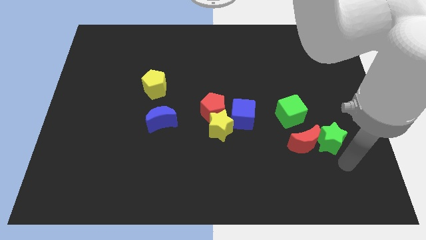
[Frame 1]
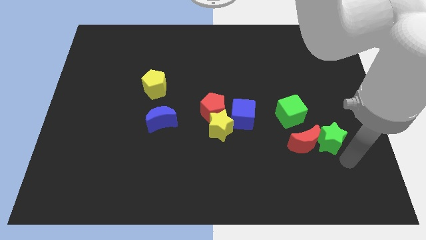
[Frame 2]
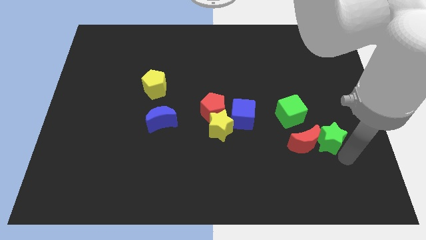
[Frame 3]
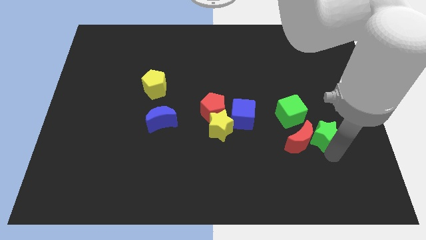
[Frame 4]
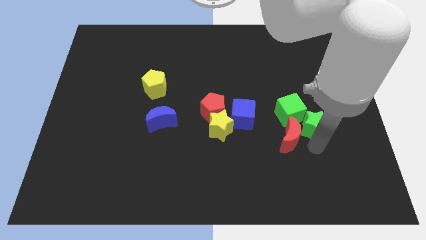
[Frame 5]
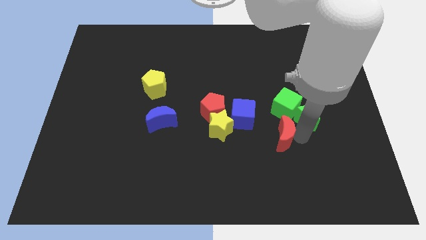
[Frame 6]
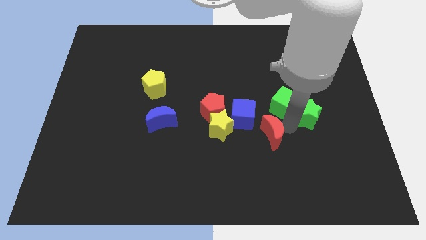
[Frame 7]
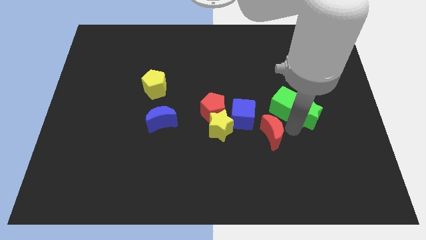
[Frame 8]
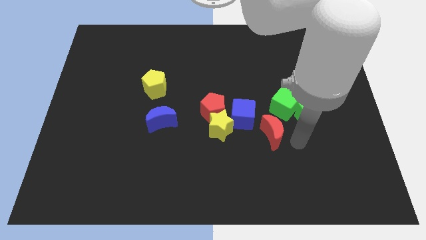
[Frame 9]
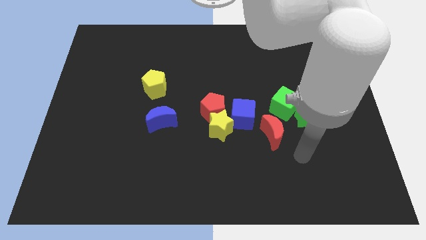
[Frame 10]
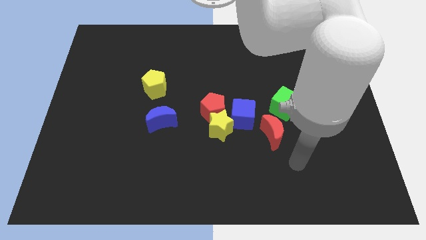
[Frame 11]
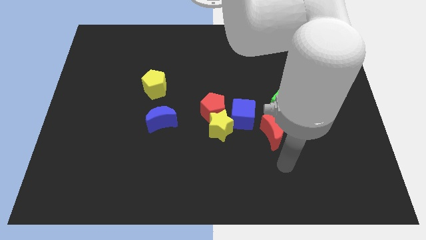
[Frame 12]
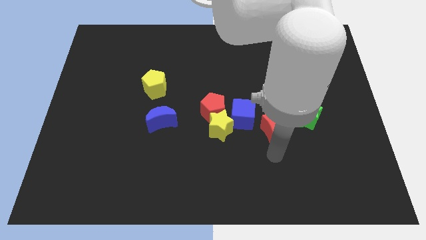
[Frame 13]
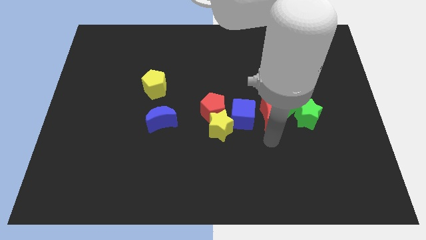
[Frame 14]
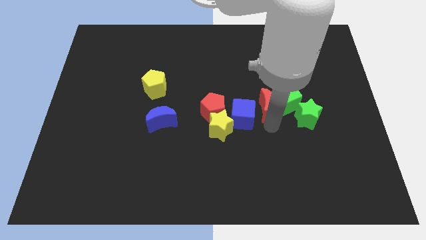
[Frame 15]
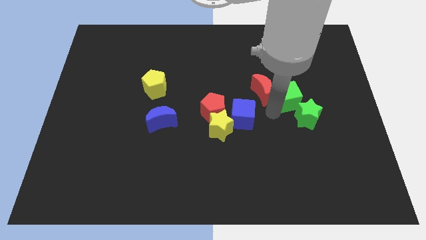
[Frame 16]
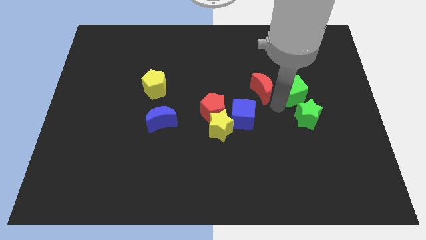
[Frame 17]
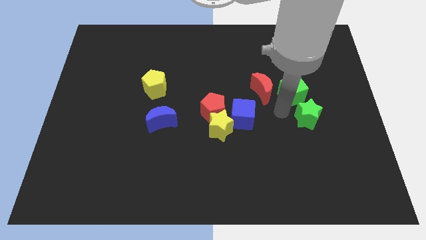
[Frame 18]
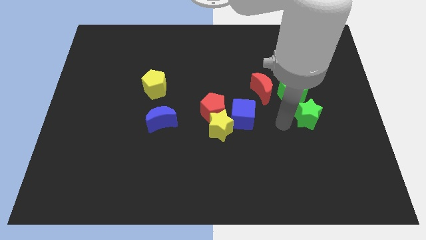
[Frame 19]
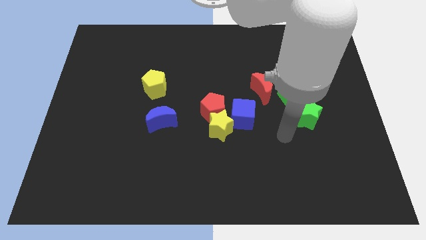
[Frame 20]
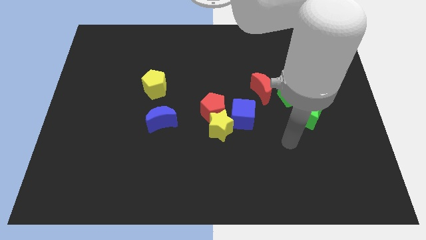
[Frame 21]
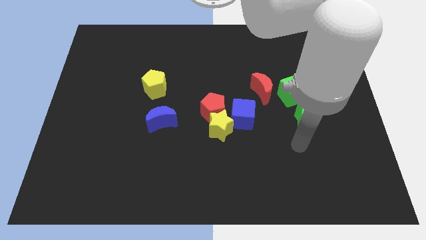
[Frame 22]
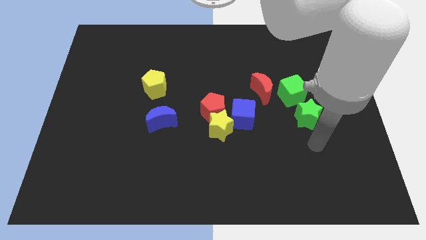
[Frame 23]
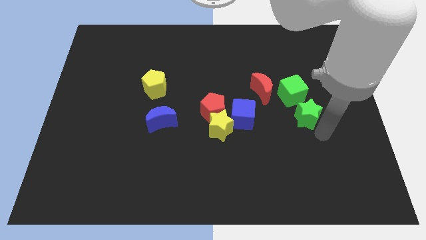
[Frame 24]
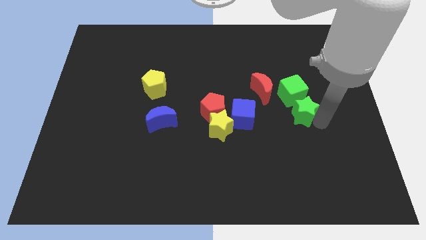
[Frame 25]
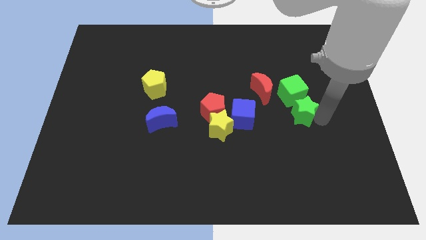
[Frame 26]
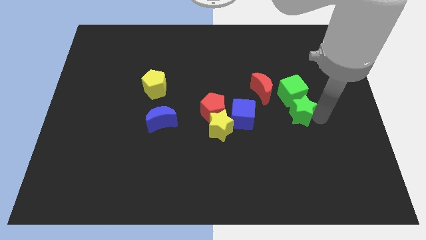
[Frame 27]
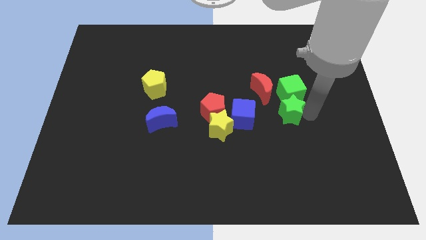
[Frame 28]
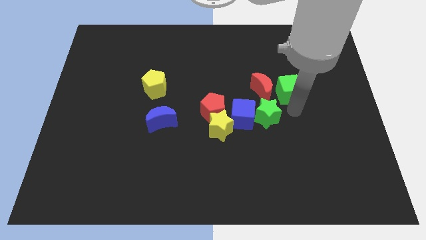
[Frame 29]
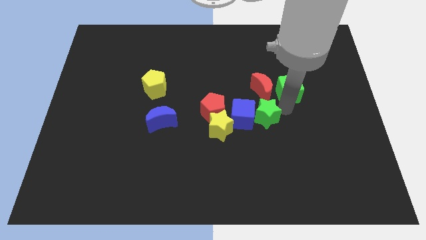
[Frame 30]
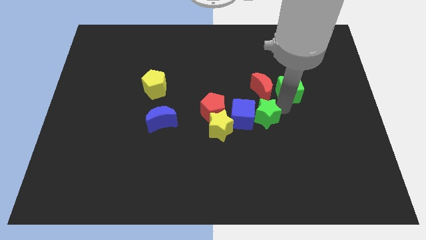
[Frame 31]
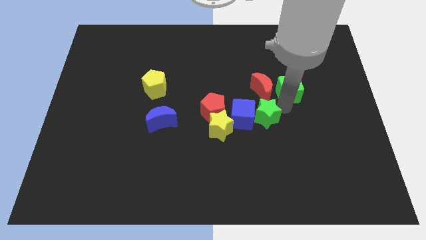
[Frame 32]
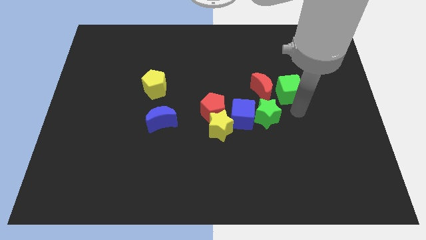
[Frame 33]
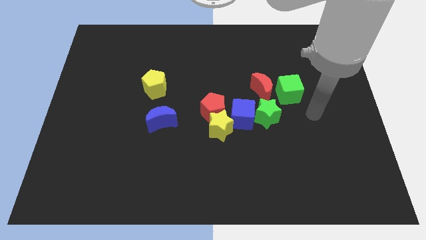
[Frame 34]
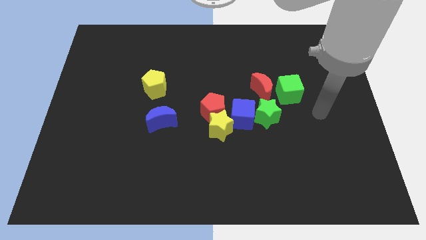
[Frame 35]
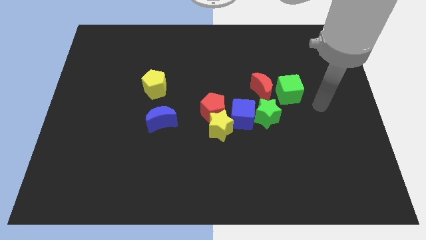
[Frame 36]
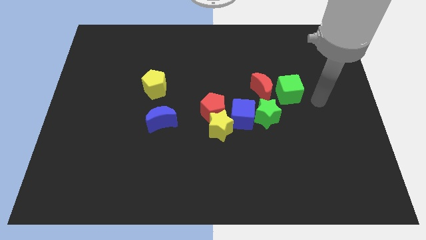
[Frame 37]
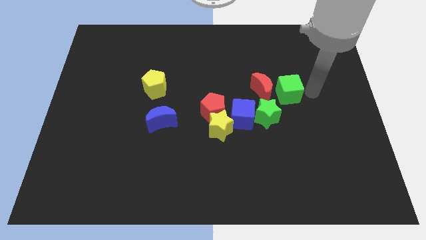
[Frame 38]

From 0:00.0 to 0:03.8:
push the green blocks and the red moon towards the center

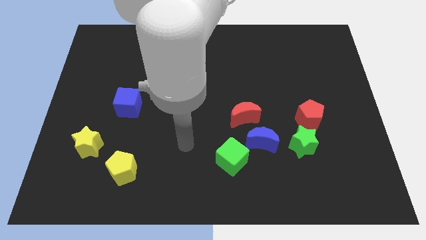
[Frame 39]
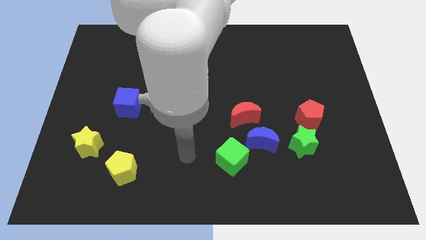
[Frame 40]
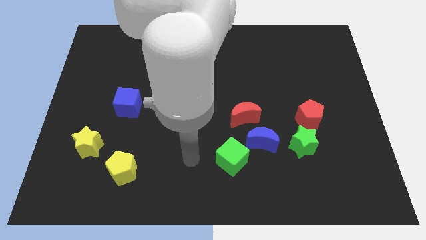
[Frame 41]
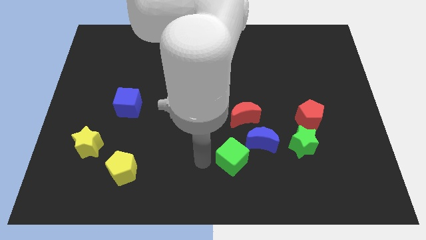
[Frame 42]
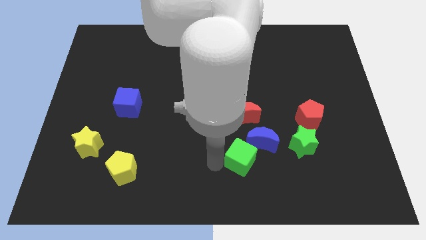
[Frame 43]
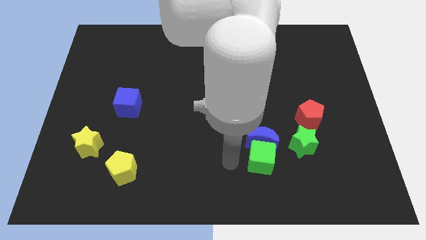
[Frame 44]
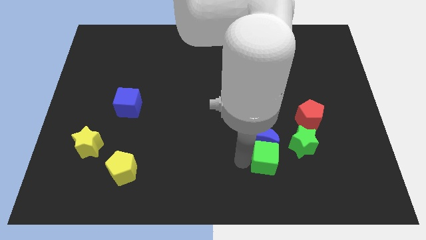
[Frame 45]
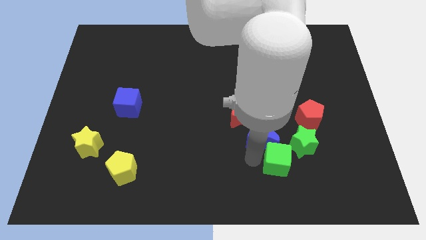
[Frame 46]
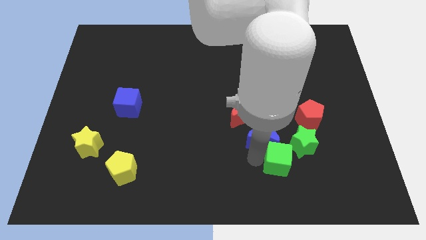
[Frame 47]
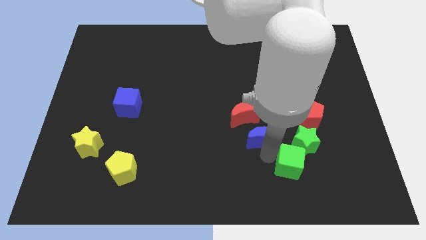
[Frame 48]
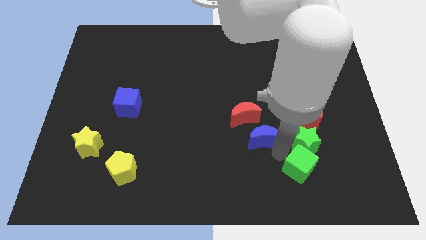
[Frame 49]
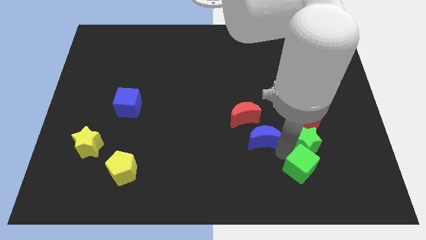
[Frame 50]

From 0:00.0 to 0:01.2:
push the green cube into the green star

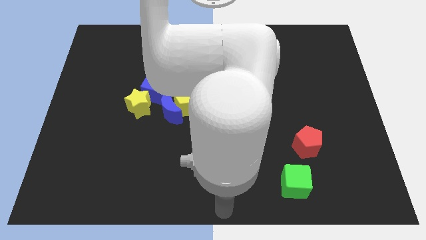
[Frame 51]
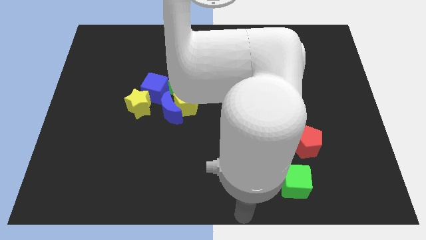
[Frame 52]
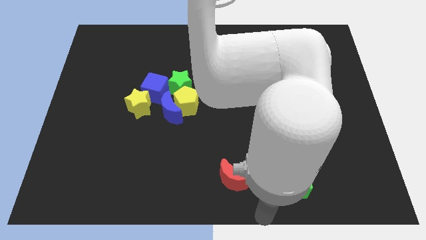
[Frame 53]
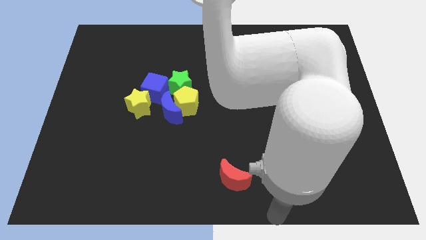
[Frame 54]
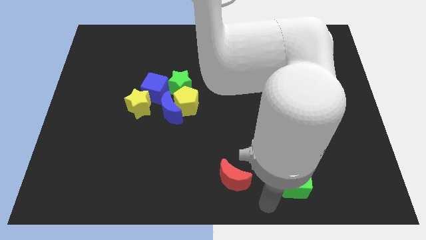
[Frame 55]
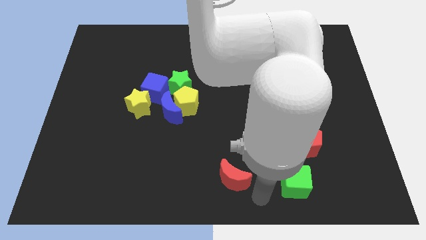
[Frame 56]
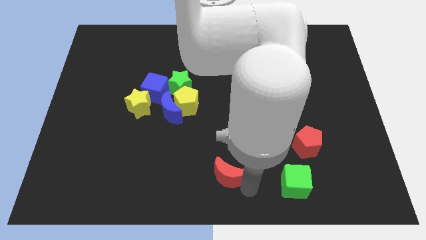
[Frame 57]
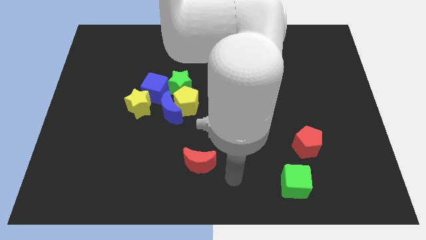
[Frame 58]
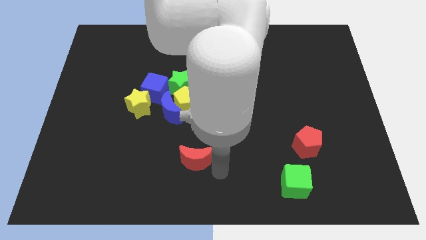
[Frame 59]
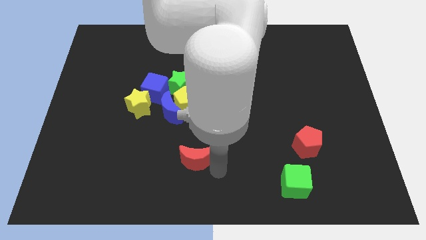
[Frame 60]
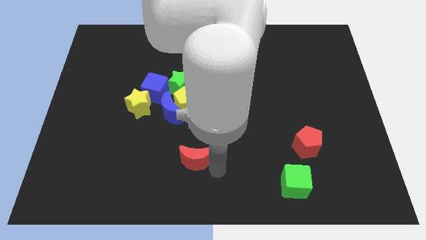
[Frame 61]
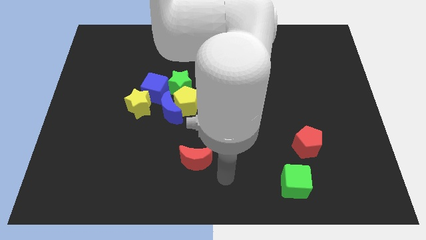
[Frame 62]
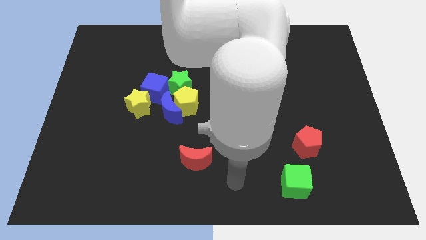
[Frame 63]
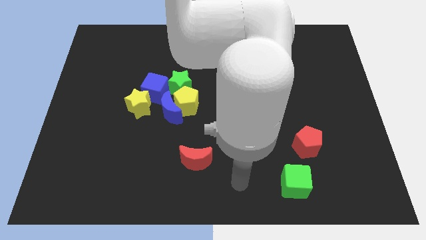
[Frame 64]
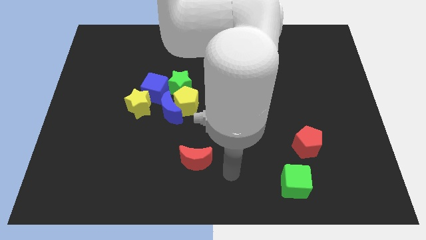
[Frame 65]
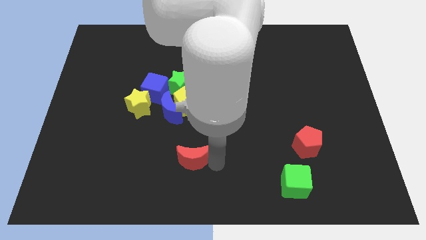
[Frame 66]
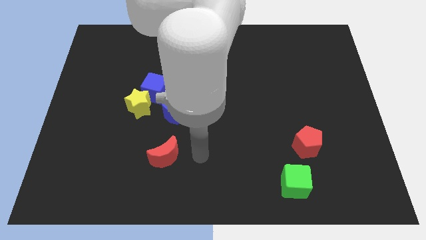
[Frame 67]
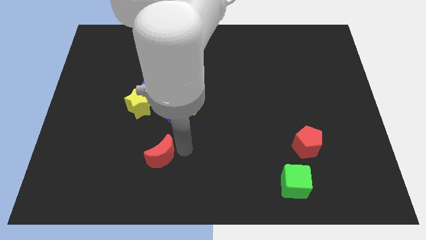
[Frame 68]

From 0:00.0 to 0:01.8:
place the red moon diagonally to the blue moon

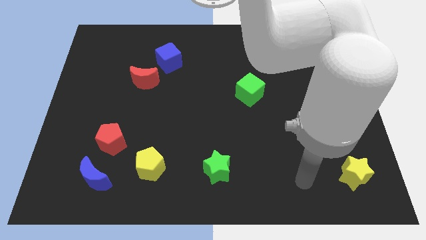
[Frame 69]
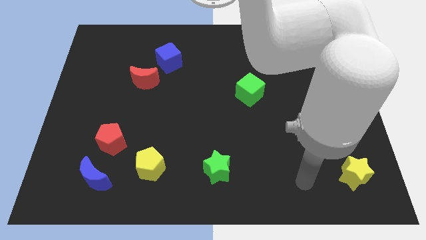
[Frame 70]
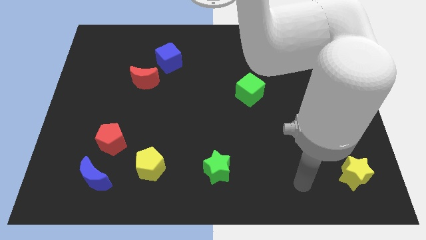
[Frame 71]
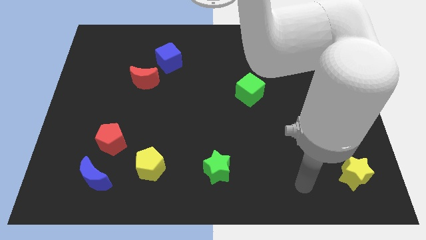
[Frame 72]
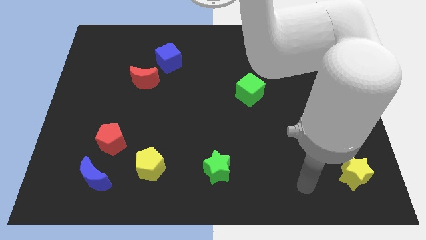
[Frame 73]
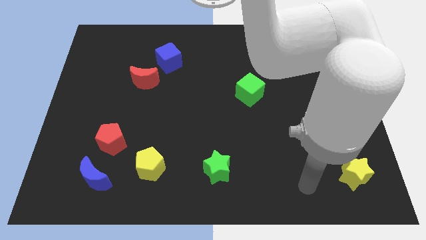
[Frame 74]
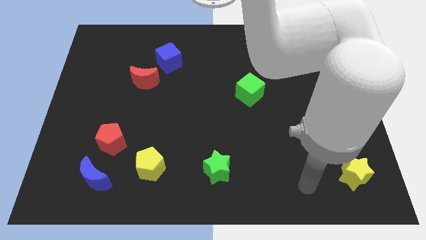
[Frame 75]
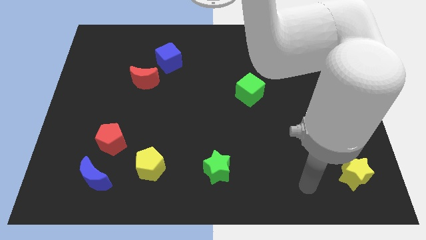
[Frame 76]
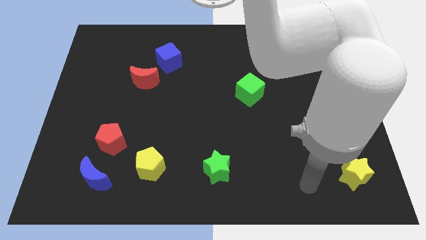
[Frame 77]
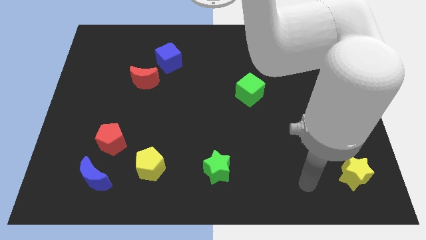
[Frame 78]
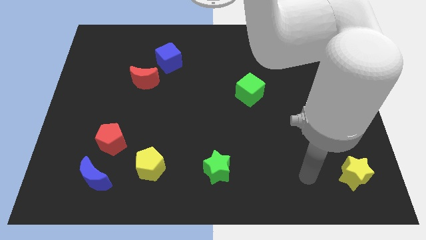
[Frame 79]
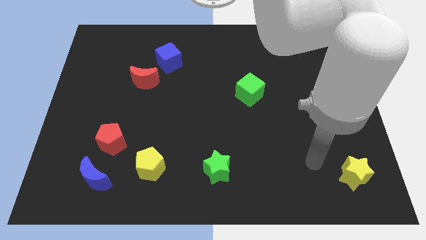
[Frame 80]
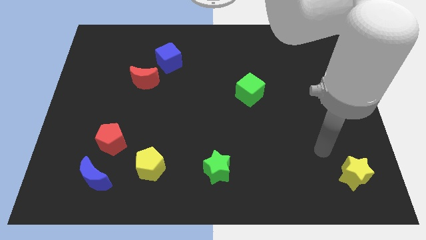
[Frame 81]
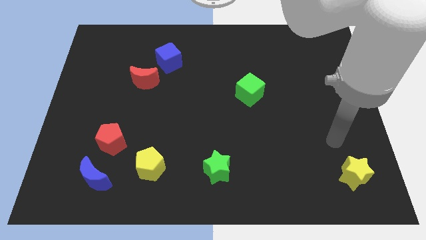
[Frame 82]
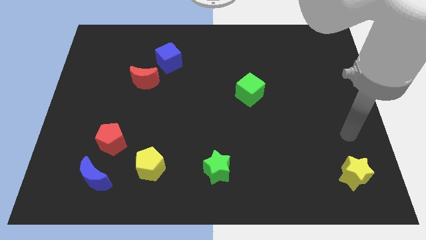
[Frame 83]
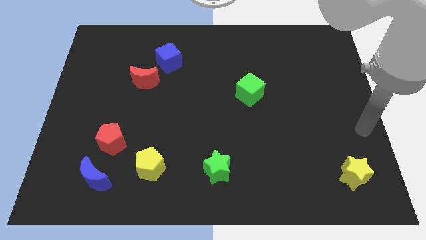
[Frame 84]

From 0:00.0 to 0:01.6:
point the arm above the yellow star

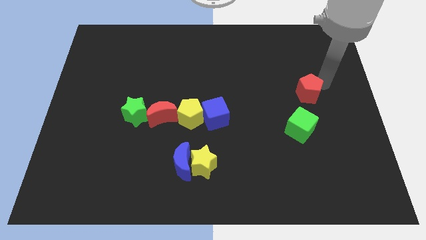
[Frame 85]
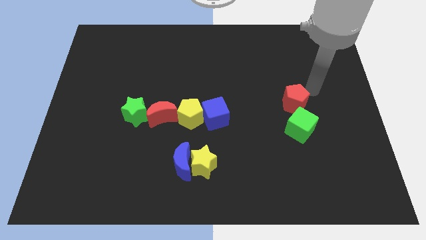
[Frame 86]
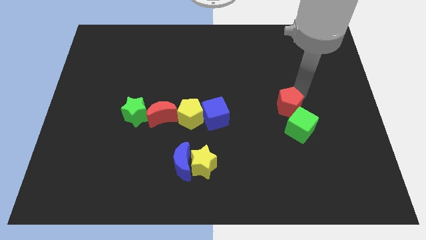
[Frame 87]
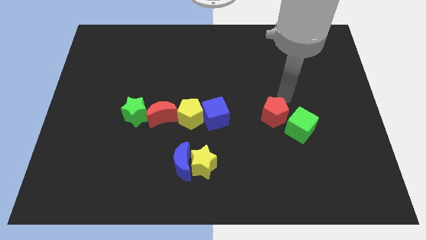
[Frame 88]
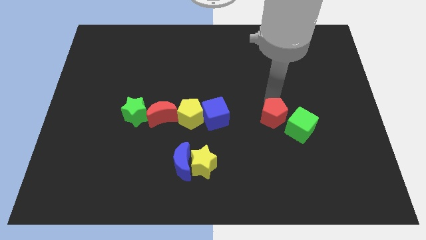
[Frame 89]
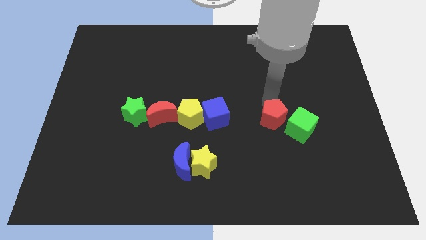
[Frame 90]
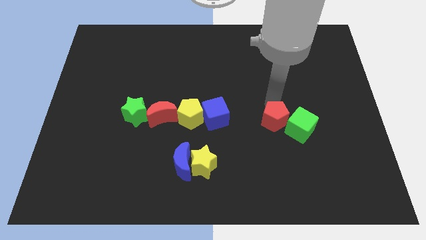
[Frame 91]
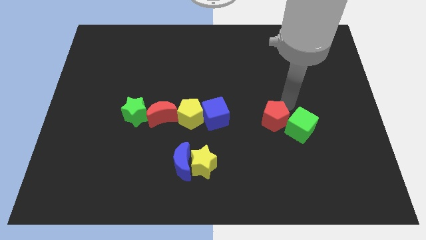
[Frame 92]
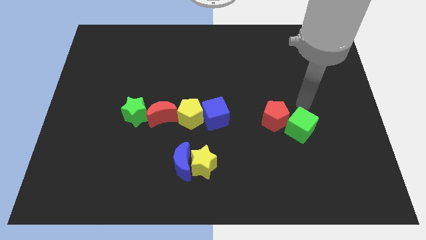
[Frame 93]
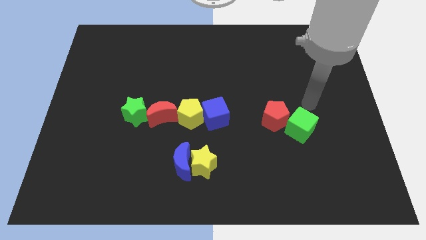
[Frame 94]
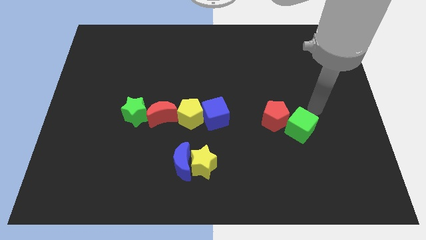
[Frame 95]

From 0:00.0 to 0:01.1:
move the red pentagon to the left of the green cube
